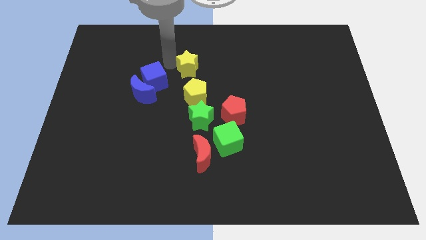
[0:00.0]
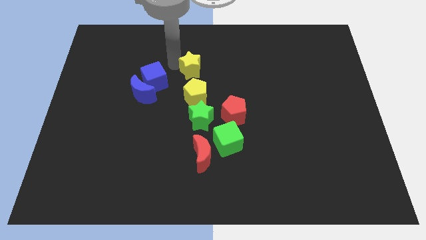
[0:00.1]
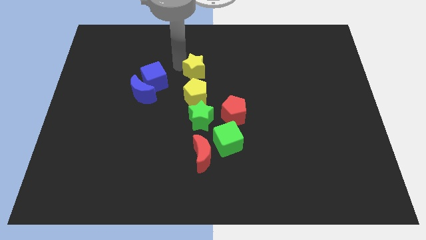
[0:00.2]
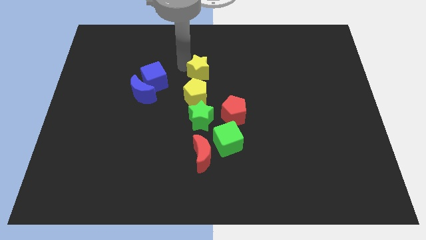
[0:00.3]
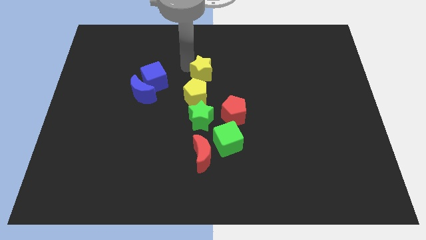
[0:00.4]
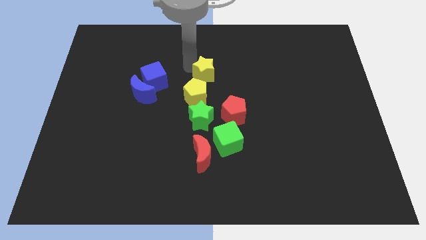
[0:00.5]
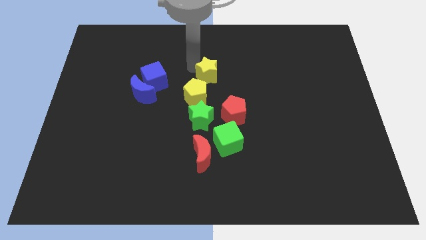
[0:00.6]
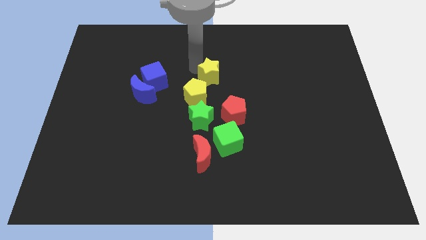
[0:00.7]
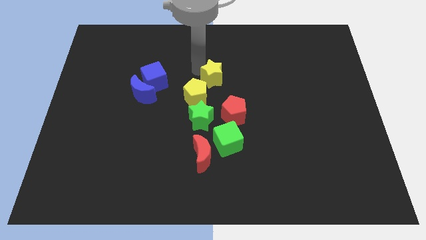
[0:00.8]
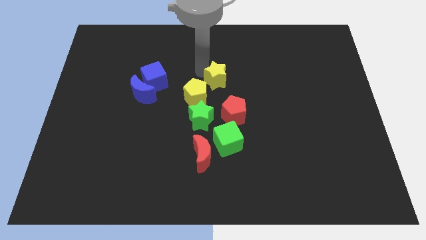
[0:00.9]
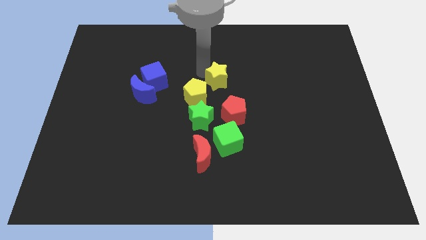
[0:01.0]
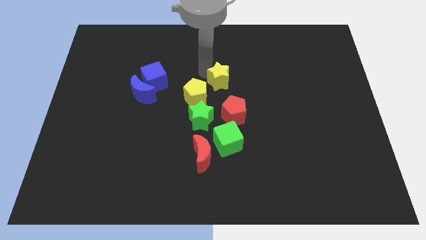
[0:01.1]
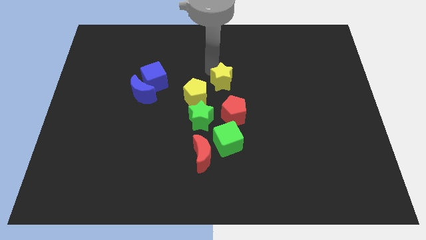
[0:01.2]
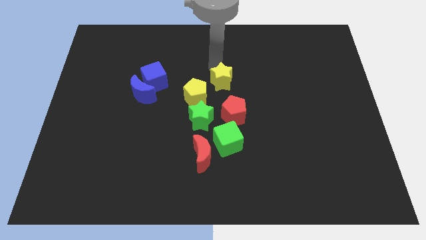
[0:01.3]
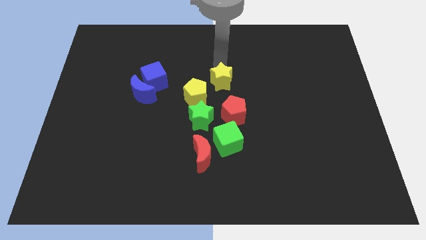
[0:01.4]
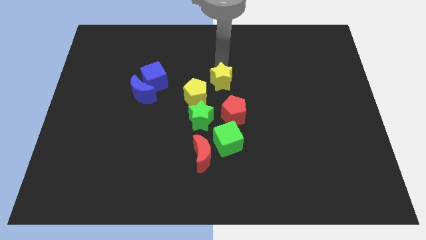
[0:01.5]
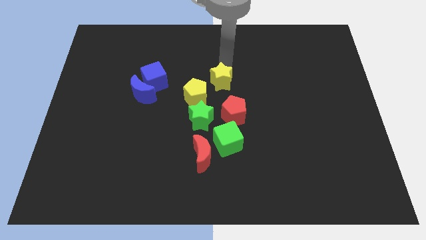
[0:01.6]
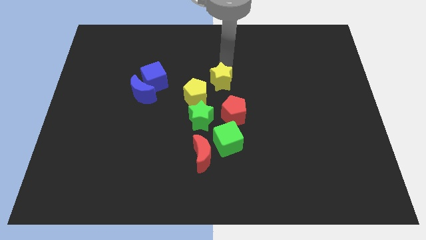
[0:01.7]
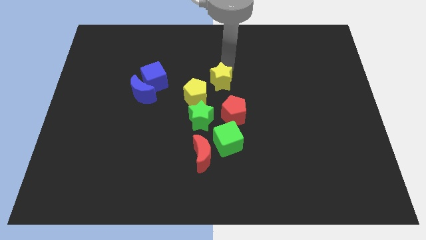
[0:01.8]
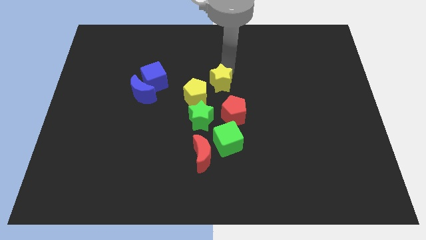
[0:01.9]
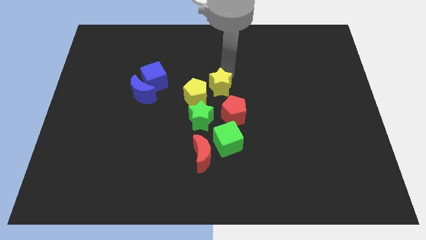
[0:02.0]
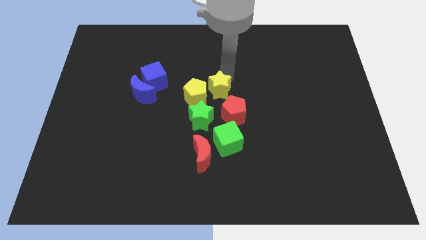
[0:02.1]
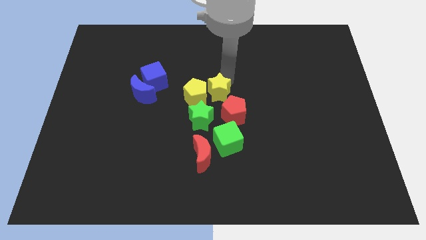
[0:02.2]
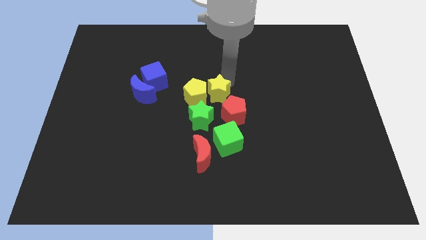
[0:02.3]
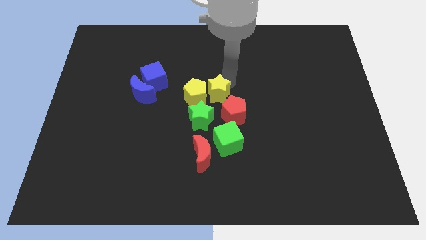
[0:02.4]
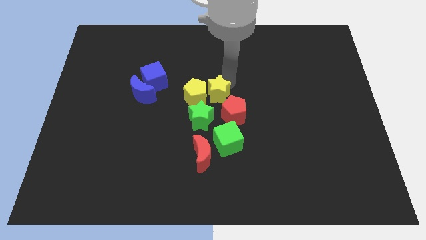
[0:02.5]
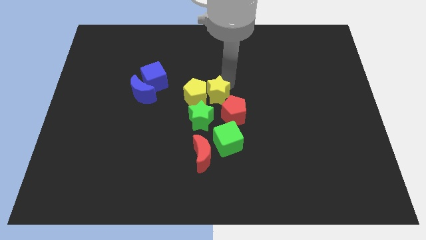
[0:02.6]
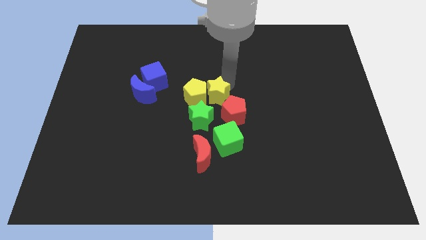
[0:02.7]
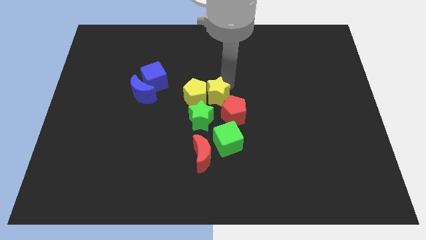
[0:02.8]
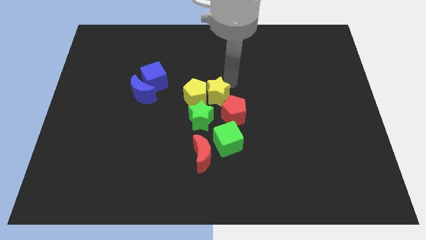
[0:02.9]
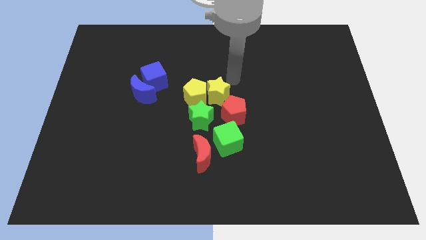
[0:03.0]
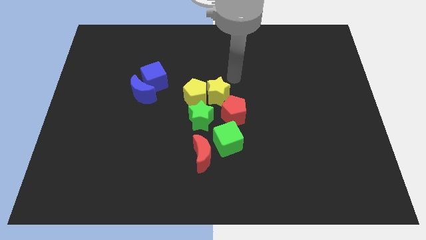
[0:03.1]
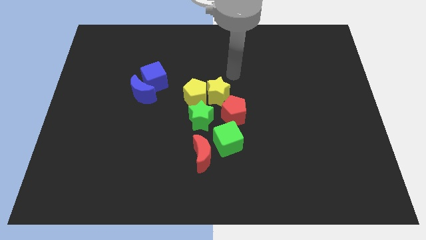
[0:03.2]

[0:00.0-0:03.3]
place the yellow star on the right side of the yellow pentagon

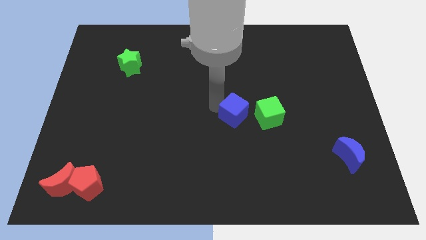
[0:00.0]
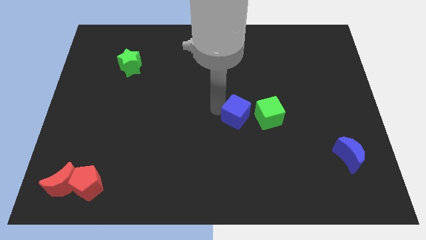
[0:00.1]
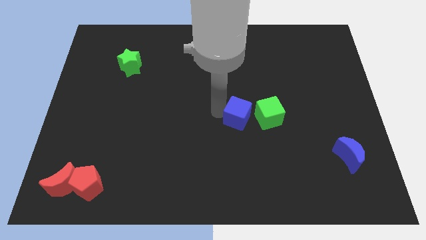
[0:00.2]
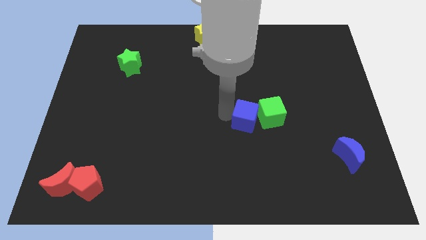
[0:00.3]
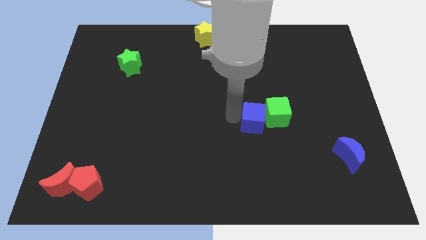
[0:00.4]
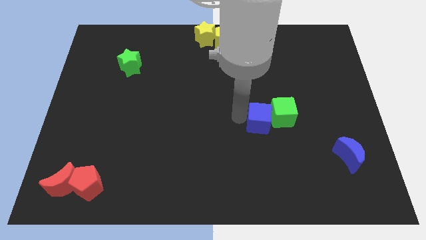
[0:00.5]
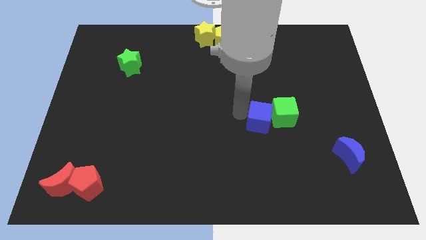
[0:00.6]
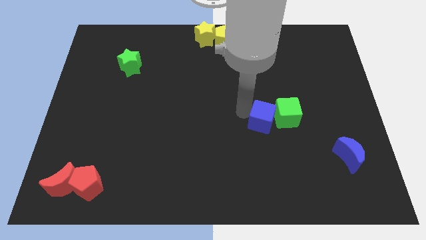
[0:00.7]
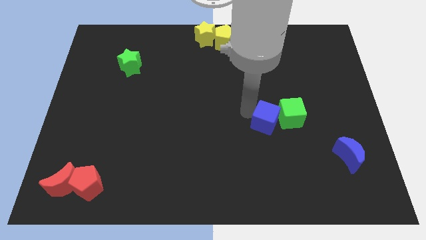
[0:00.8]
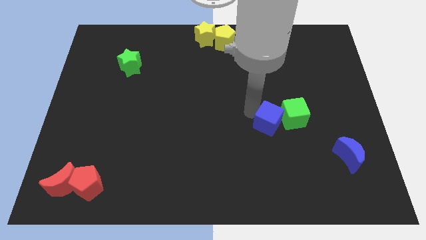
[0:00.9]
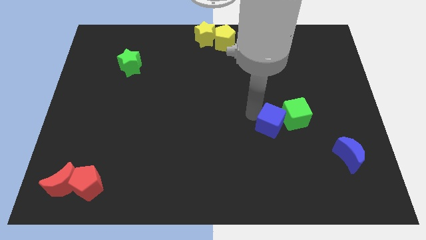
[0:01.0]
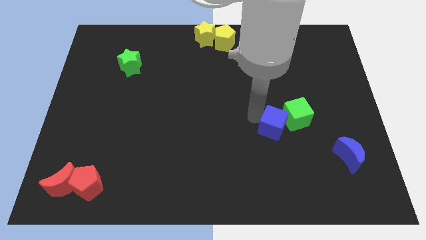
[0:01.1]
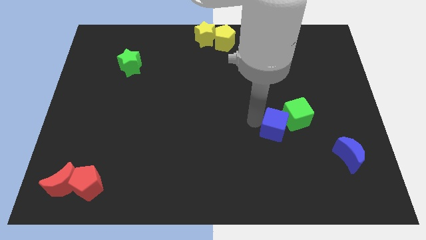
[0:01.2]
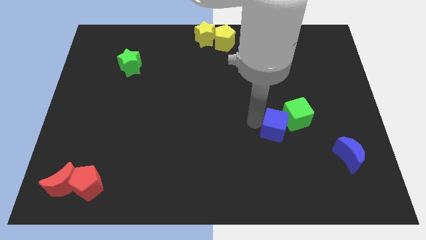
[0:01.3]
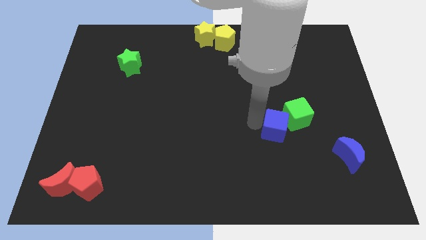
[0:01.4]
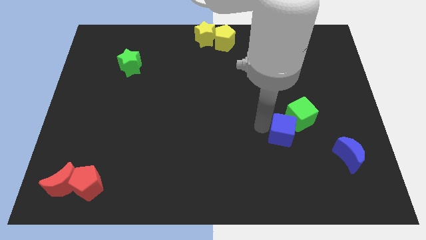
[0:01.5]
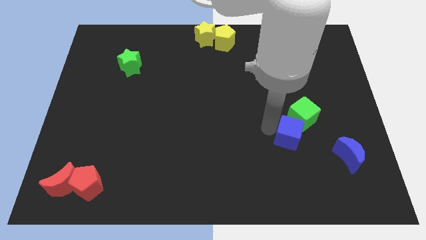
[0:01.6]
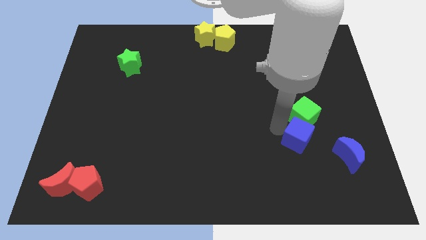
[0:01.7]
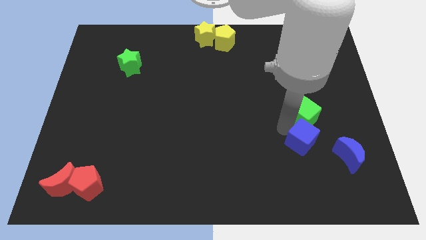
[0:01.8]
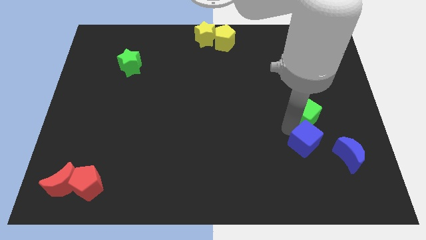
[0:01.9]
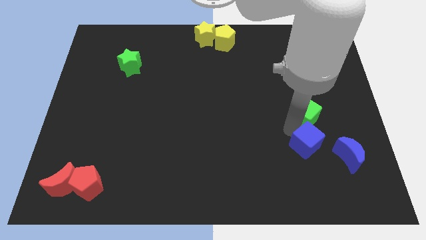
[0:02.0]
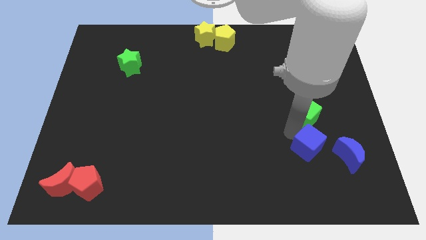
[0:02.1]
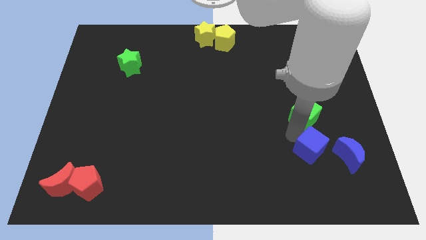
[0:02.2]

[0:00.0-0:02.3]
push blue cube below green cube

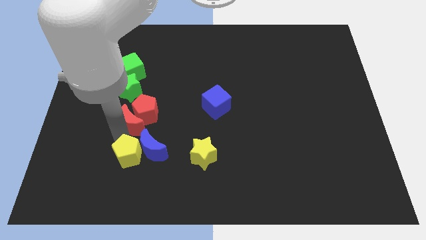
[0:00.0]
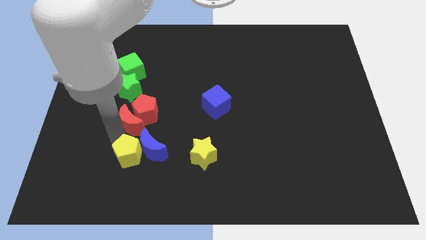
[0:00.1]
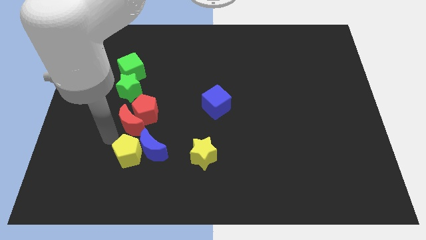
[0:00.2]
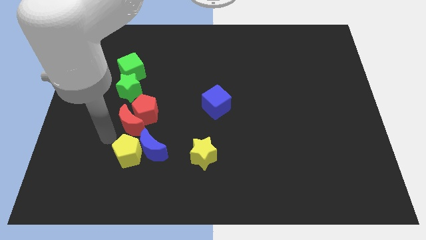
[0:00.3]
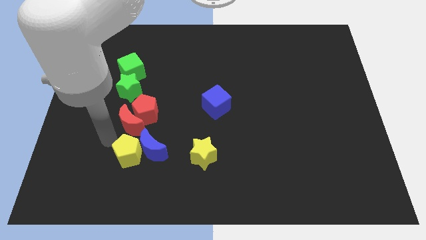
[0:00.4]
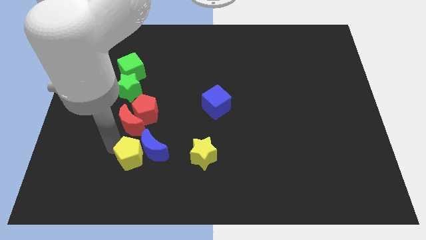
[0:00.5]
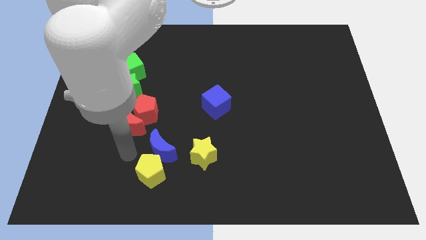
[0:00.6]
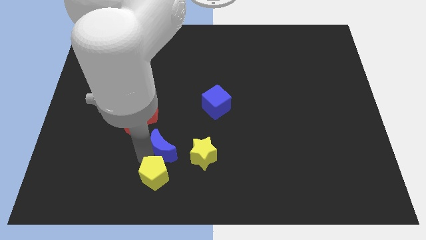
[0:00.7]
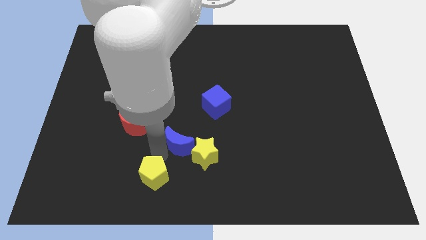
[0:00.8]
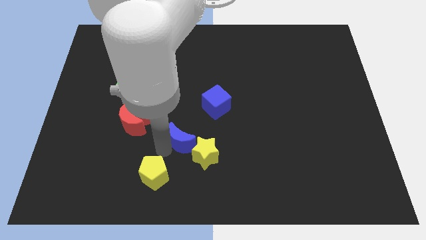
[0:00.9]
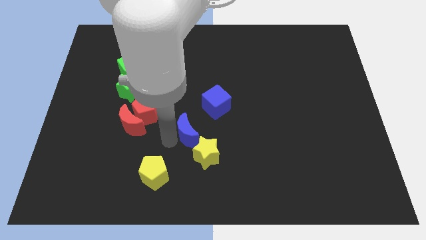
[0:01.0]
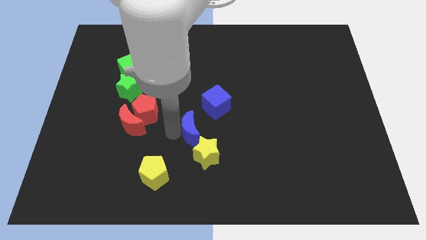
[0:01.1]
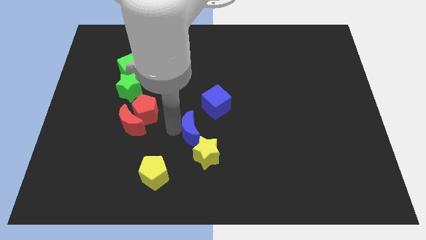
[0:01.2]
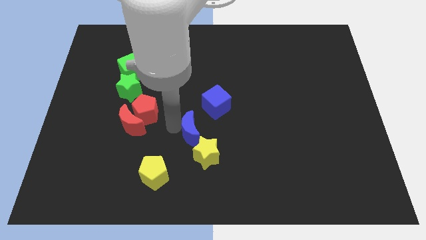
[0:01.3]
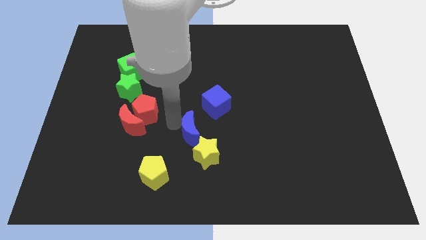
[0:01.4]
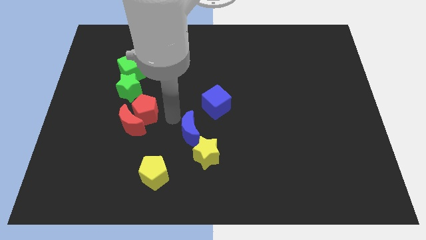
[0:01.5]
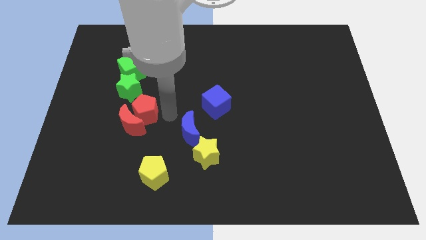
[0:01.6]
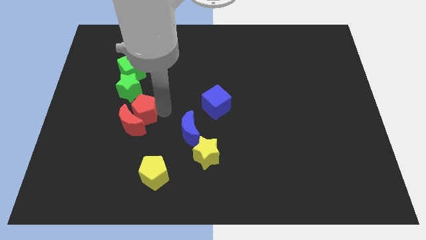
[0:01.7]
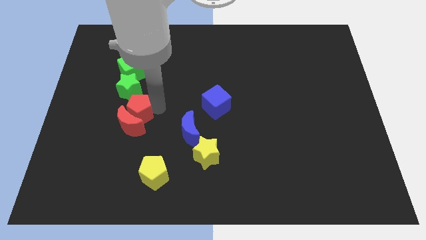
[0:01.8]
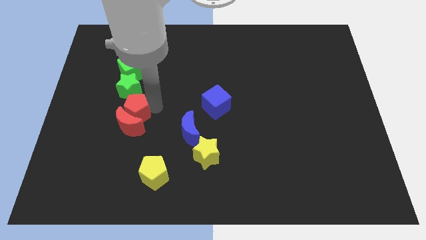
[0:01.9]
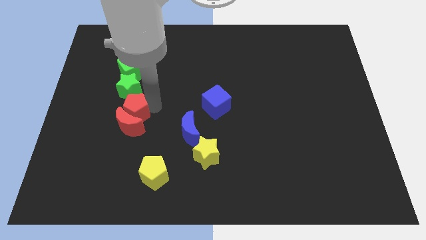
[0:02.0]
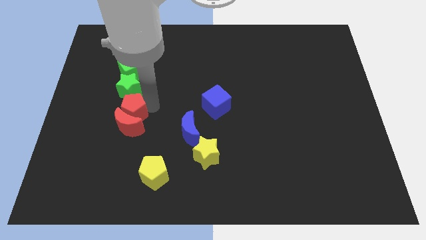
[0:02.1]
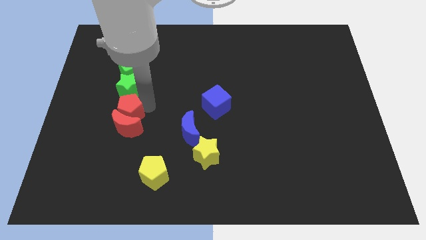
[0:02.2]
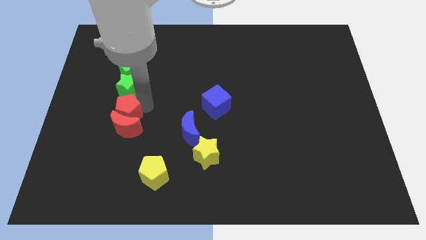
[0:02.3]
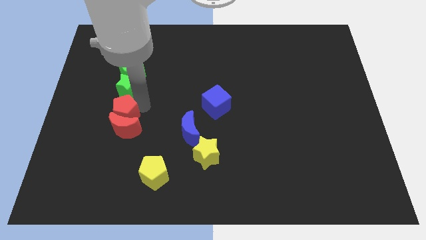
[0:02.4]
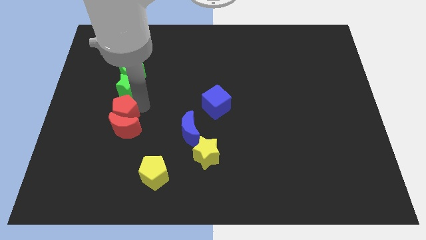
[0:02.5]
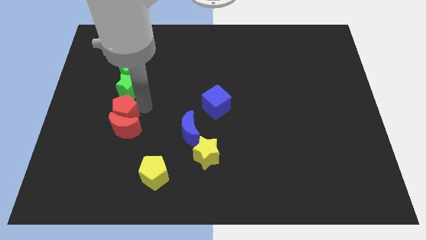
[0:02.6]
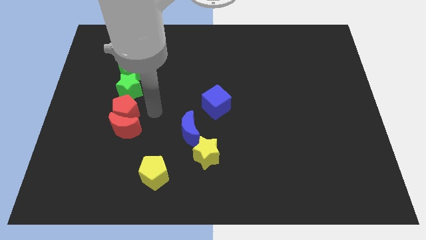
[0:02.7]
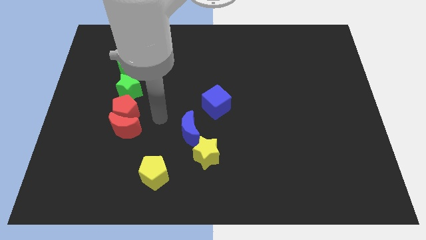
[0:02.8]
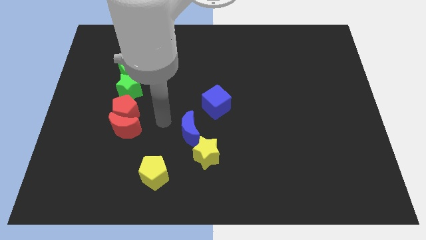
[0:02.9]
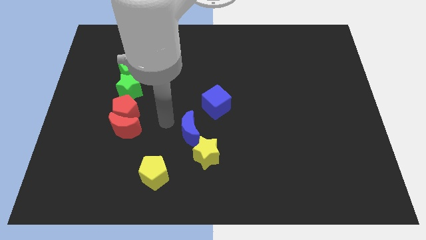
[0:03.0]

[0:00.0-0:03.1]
place red pentagon in between green star and red moon

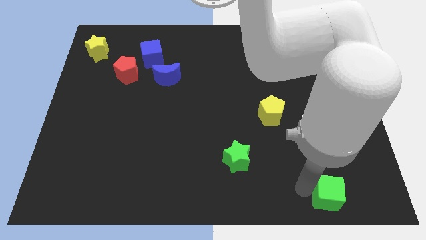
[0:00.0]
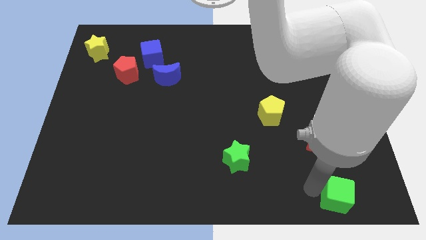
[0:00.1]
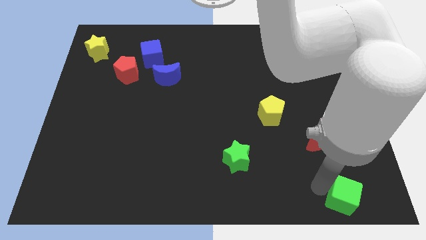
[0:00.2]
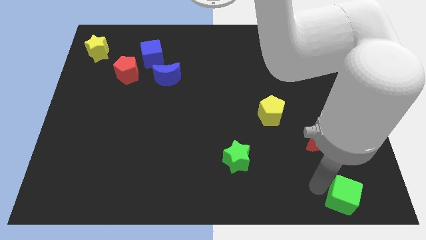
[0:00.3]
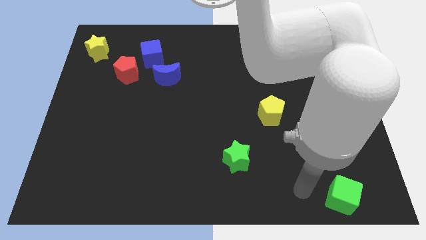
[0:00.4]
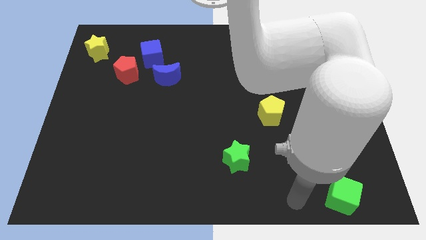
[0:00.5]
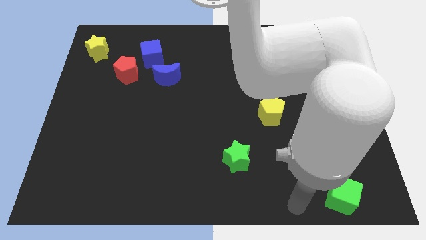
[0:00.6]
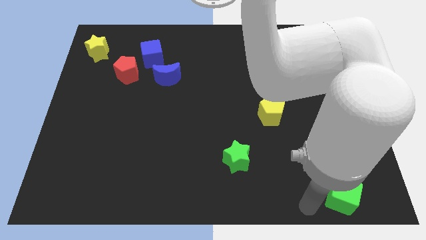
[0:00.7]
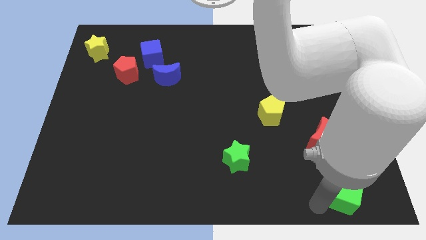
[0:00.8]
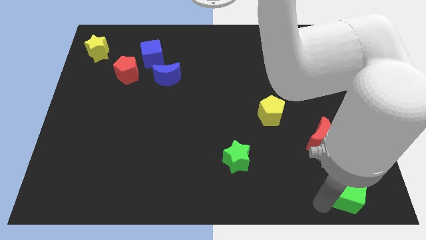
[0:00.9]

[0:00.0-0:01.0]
place green cube to the bottom right corner of the board
